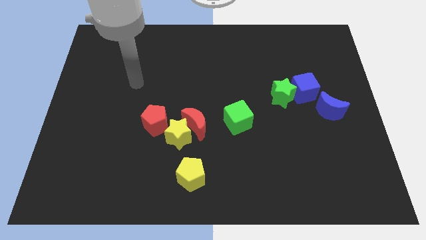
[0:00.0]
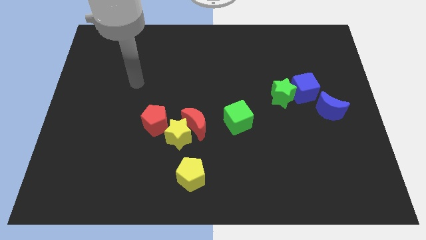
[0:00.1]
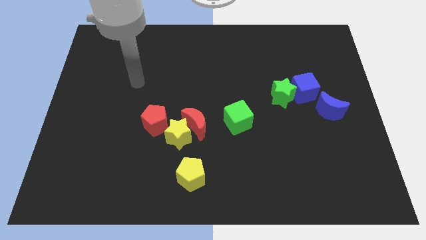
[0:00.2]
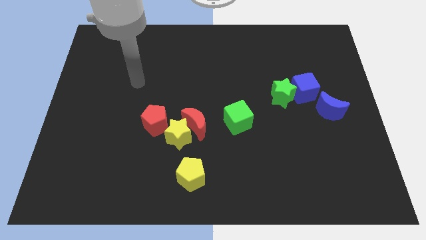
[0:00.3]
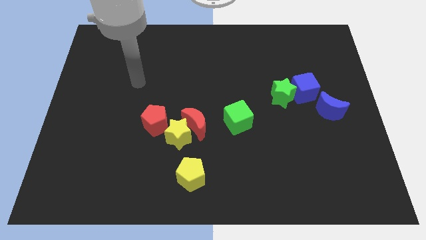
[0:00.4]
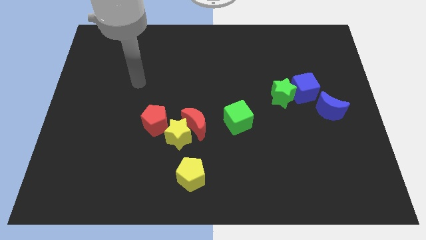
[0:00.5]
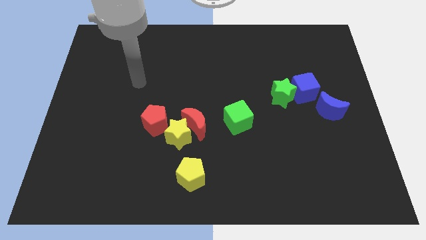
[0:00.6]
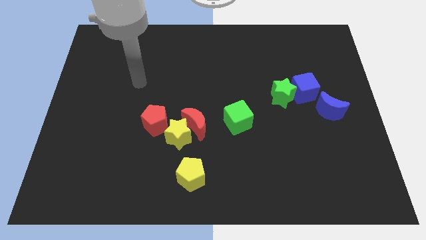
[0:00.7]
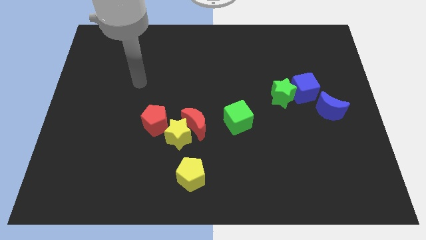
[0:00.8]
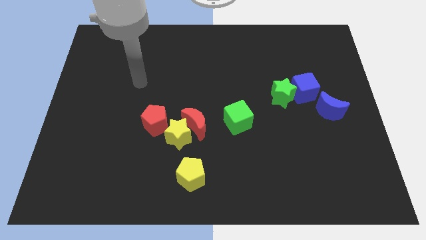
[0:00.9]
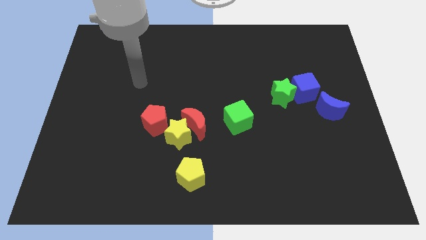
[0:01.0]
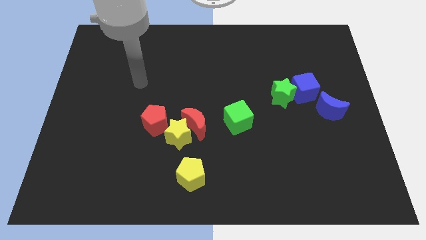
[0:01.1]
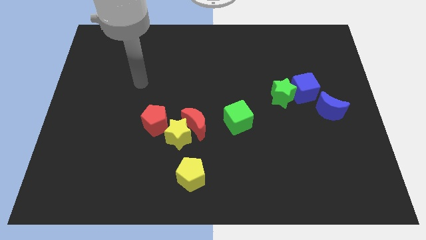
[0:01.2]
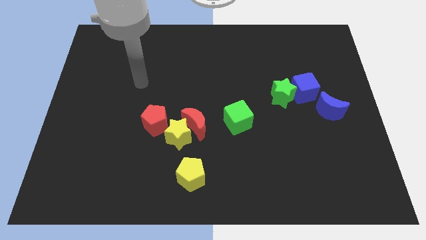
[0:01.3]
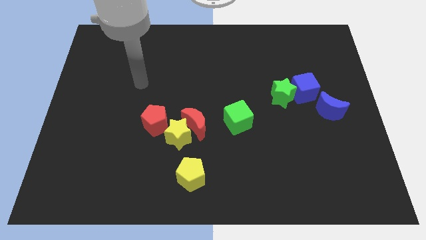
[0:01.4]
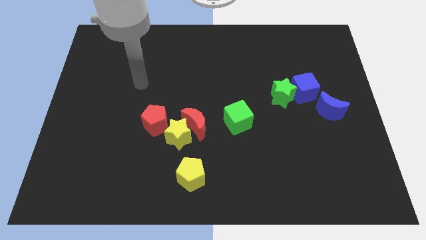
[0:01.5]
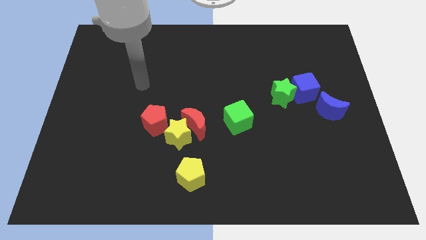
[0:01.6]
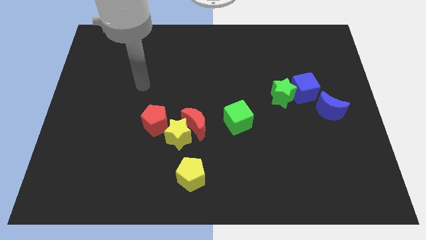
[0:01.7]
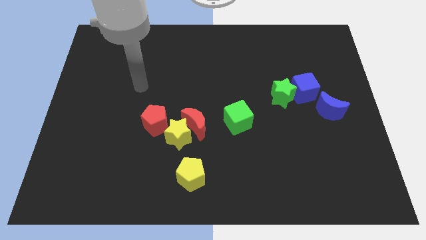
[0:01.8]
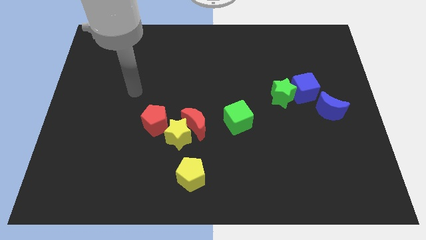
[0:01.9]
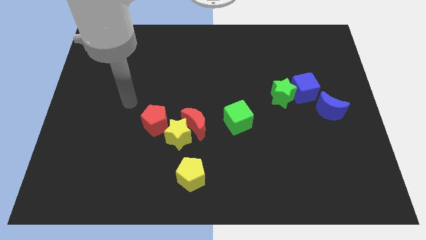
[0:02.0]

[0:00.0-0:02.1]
push the arm towards the red pentagon

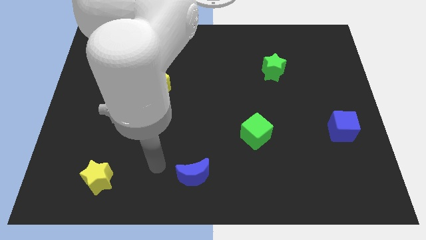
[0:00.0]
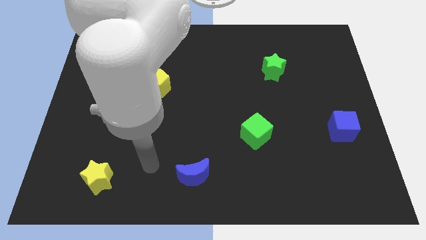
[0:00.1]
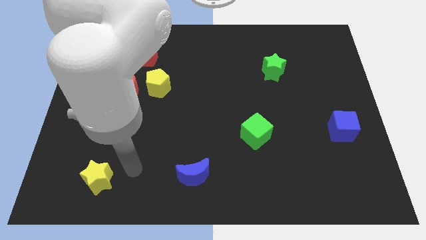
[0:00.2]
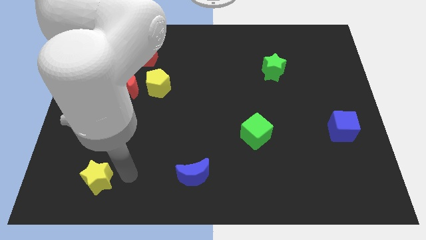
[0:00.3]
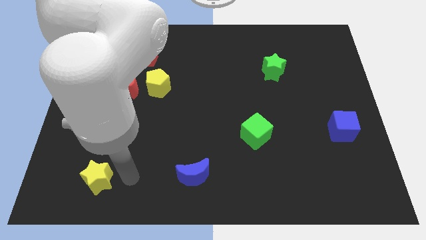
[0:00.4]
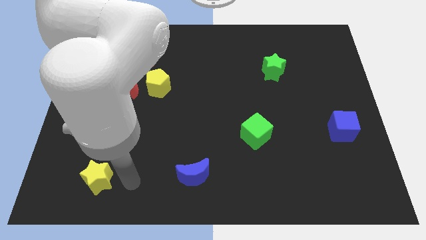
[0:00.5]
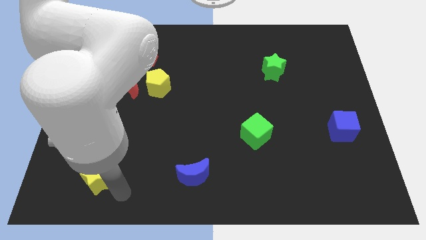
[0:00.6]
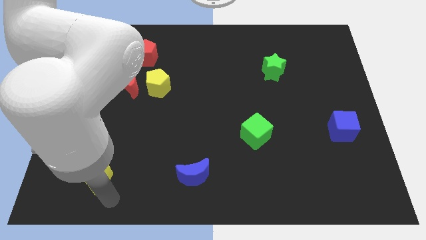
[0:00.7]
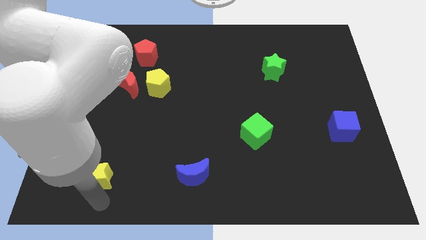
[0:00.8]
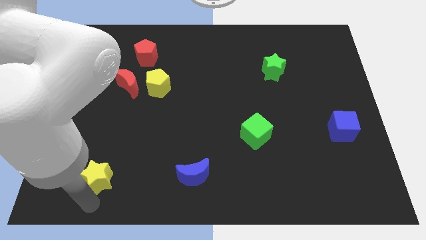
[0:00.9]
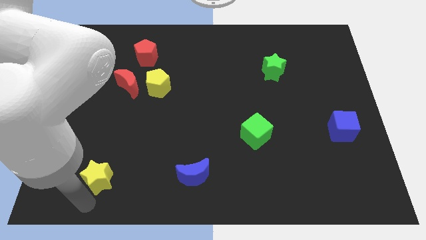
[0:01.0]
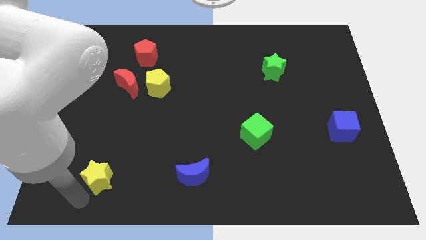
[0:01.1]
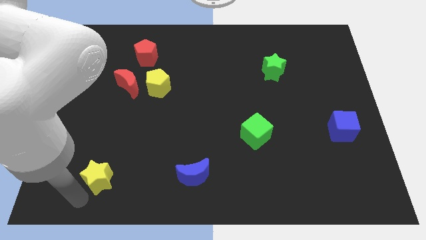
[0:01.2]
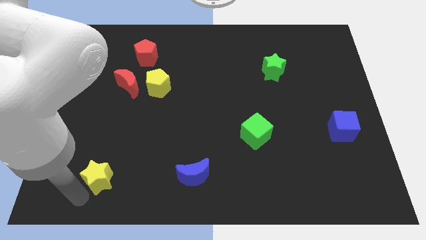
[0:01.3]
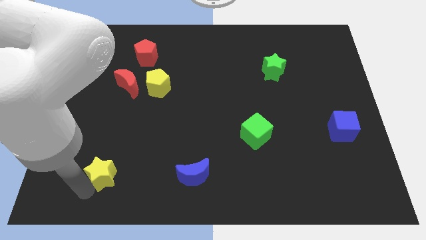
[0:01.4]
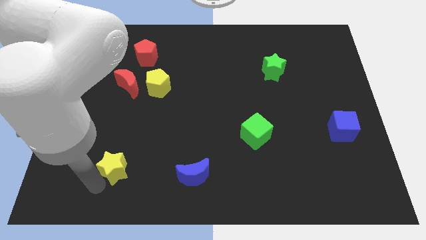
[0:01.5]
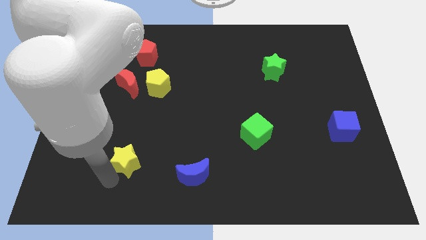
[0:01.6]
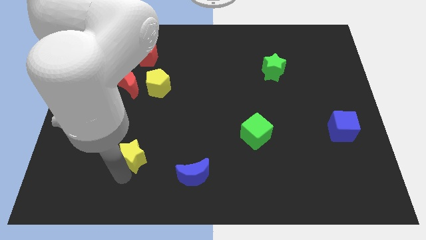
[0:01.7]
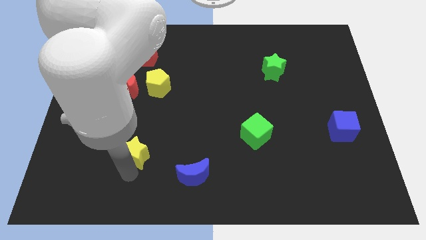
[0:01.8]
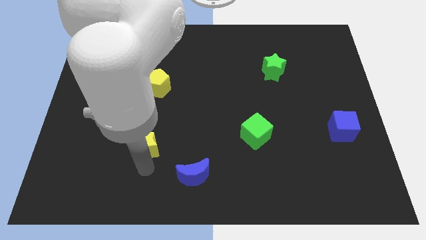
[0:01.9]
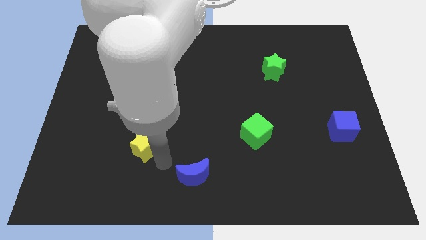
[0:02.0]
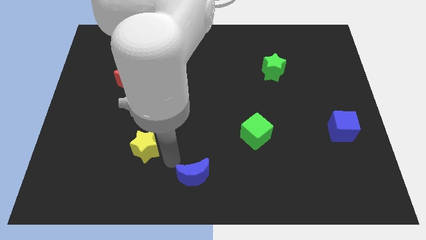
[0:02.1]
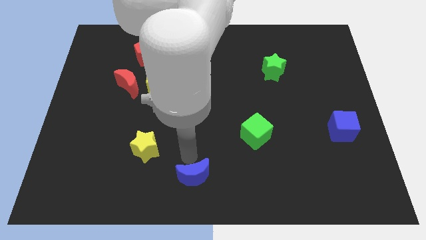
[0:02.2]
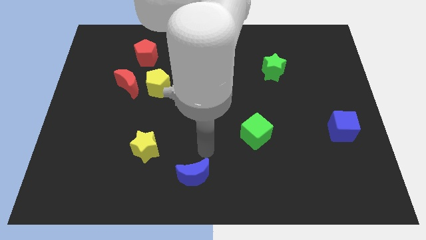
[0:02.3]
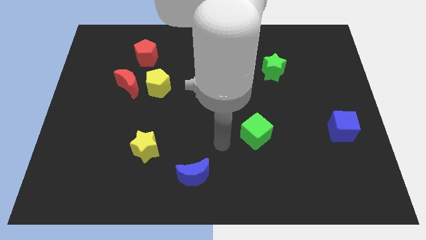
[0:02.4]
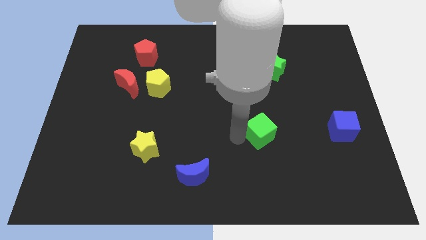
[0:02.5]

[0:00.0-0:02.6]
move the yellow star to the top left of the blue crescent

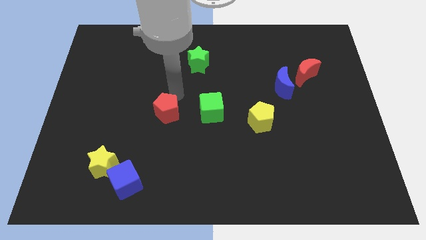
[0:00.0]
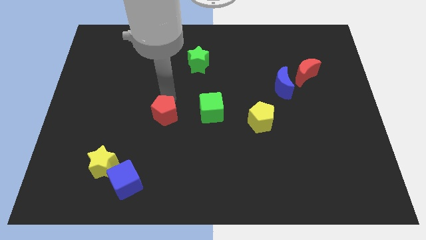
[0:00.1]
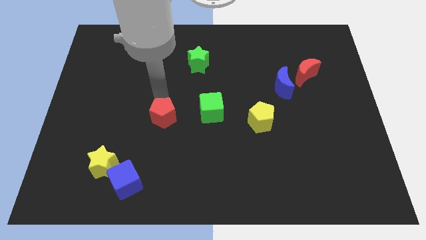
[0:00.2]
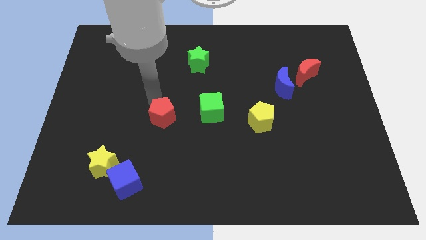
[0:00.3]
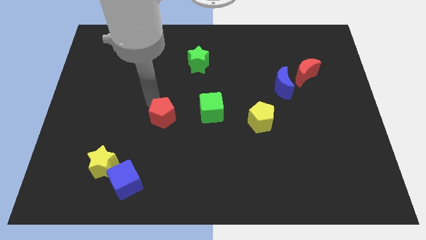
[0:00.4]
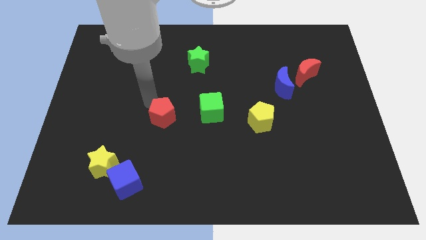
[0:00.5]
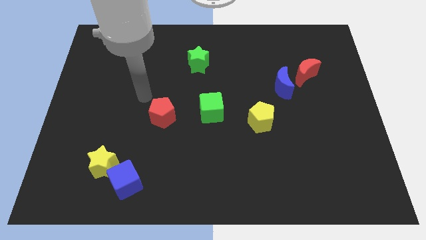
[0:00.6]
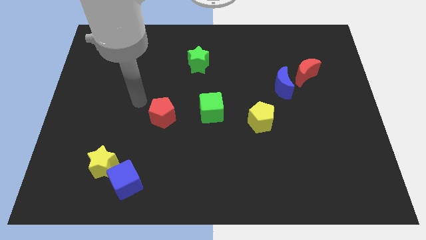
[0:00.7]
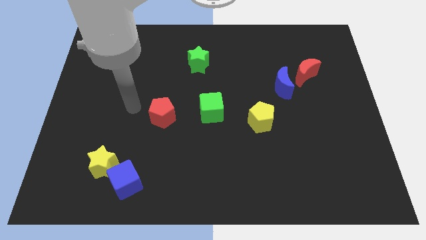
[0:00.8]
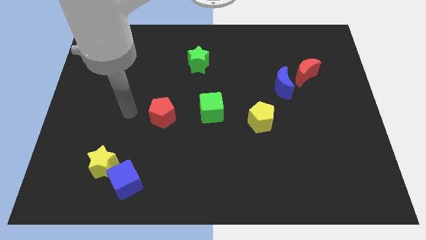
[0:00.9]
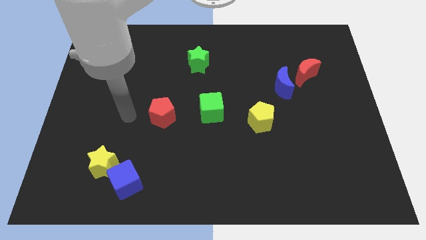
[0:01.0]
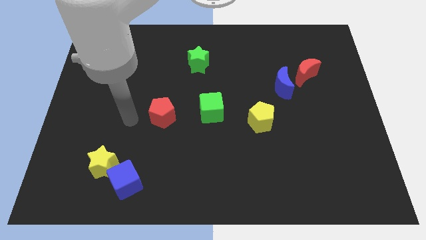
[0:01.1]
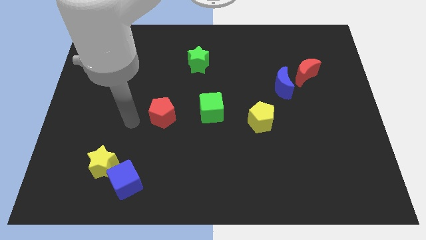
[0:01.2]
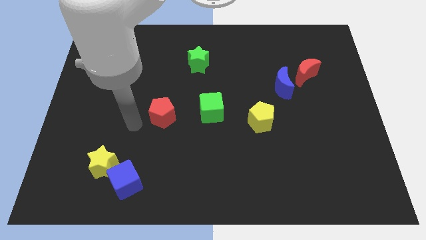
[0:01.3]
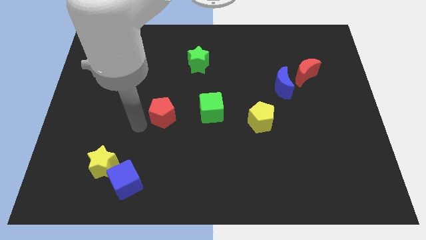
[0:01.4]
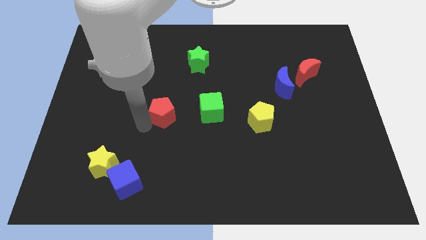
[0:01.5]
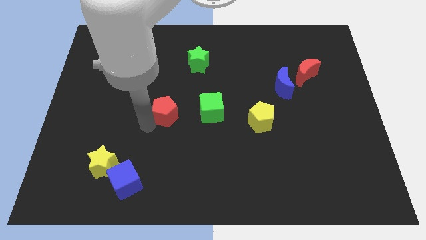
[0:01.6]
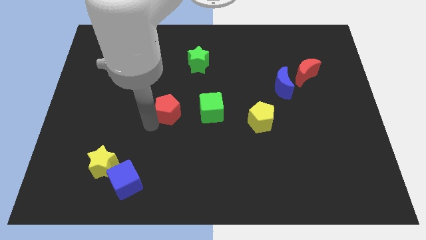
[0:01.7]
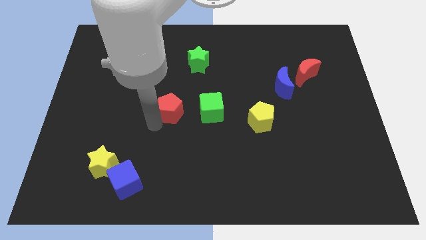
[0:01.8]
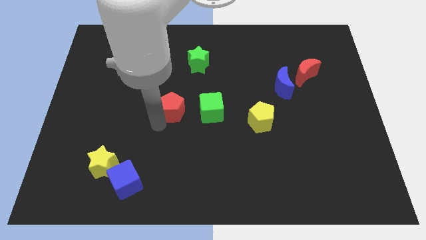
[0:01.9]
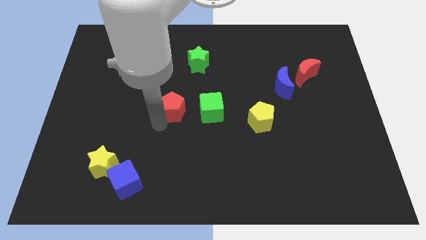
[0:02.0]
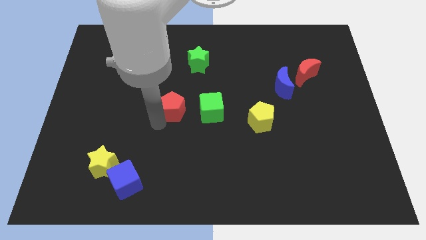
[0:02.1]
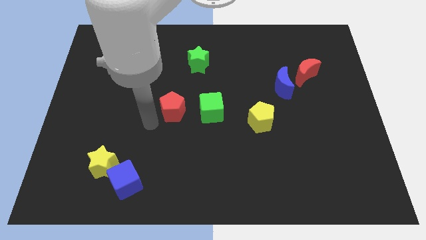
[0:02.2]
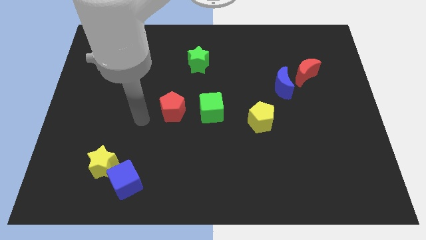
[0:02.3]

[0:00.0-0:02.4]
place the red pentagon horizontally to the left side of the green cube

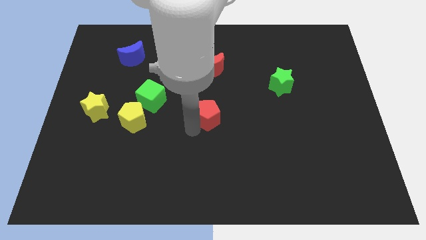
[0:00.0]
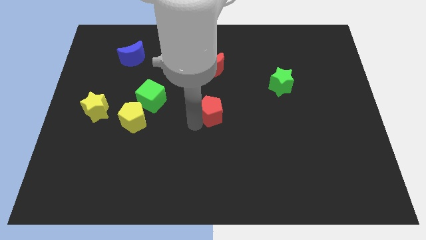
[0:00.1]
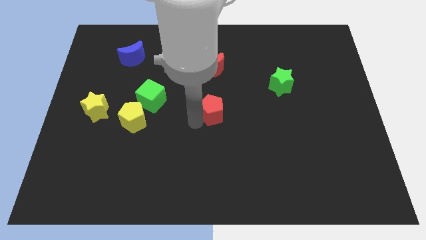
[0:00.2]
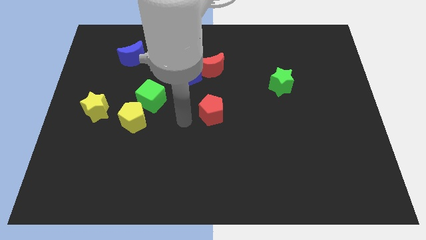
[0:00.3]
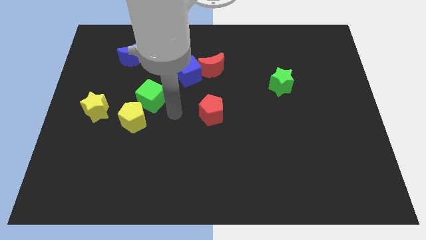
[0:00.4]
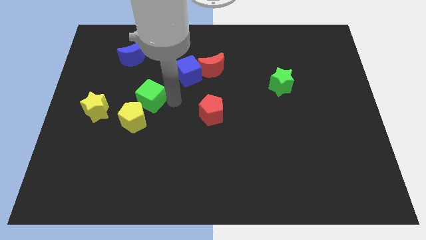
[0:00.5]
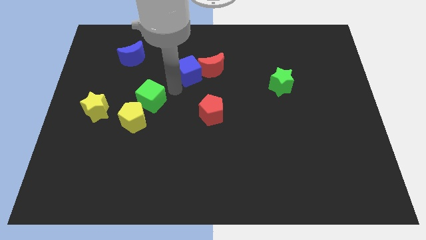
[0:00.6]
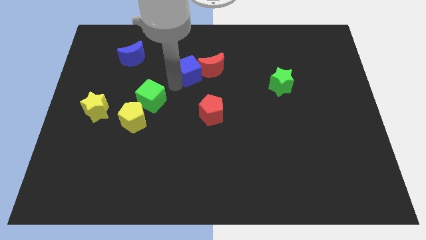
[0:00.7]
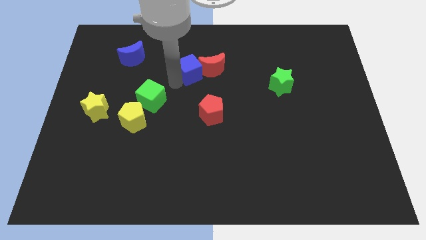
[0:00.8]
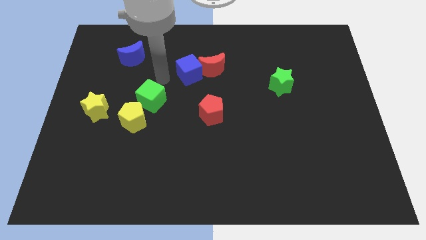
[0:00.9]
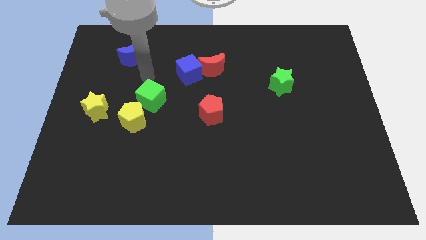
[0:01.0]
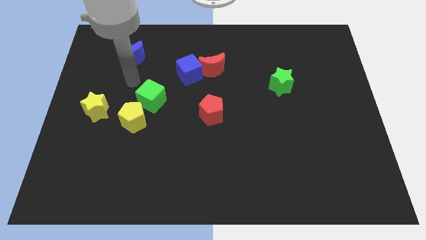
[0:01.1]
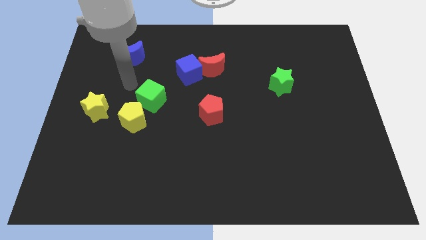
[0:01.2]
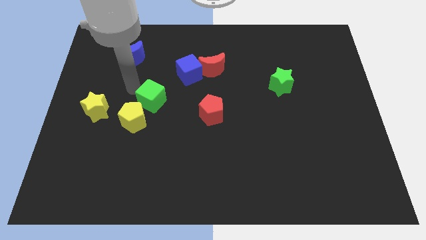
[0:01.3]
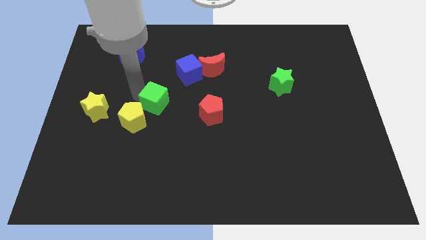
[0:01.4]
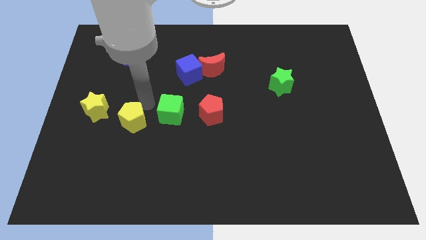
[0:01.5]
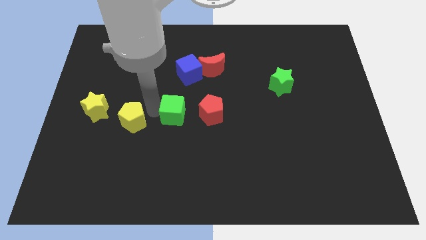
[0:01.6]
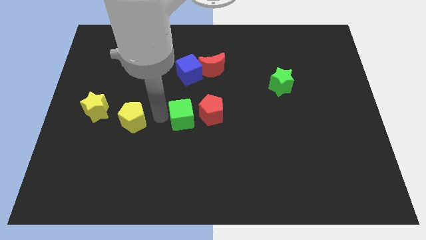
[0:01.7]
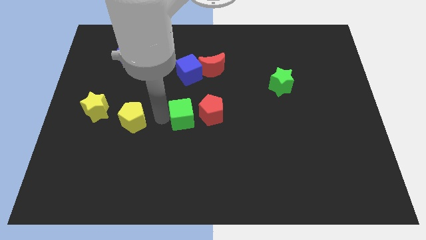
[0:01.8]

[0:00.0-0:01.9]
place the green cube at the left side of the red pentagon
